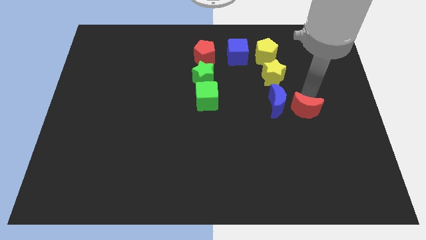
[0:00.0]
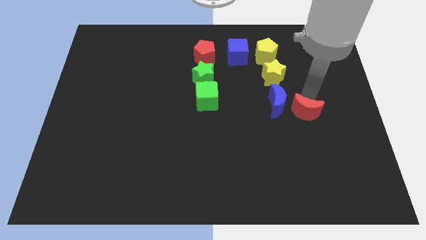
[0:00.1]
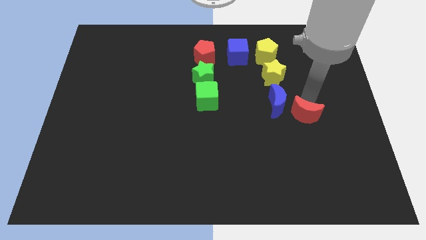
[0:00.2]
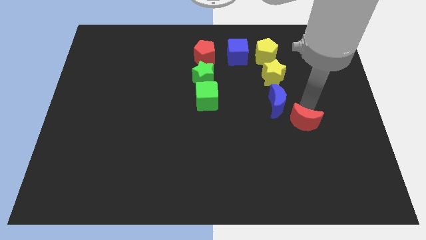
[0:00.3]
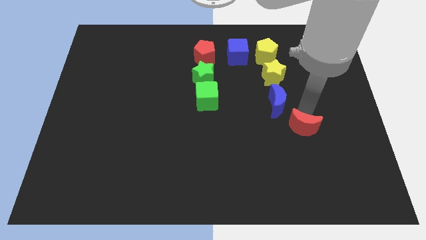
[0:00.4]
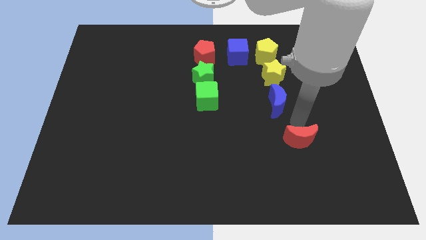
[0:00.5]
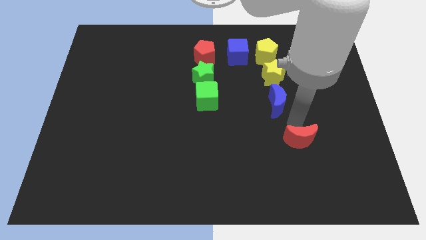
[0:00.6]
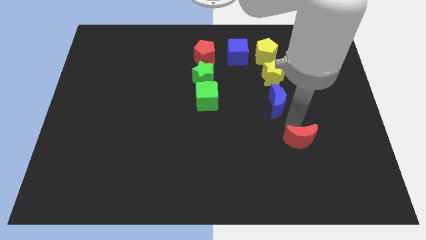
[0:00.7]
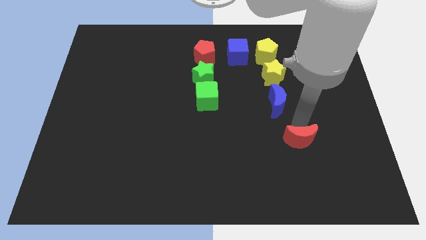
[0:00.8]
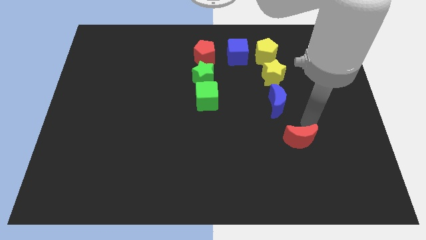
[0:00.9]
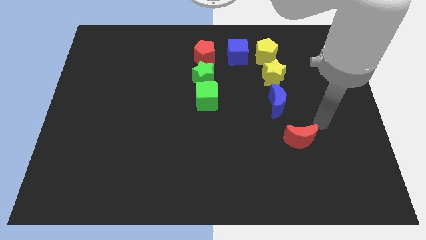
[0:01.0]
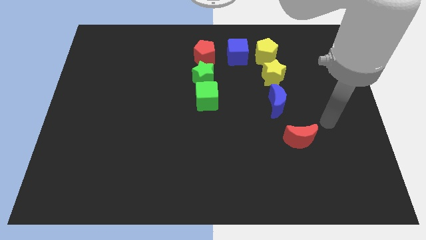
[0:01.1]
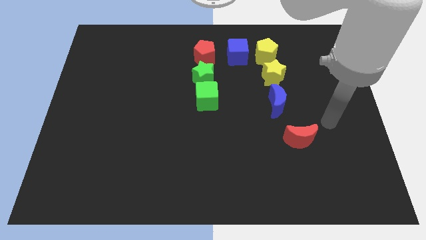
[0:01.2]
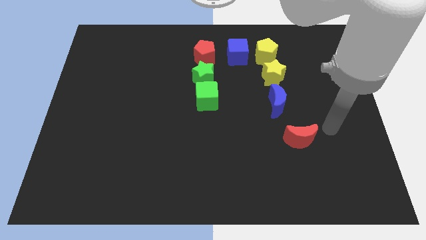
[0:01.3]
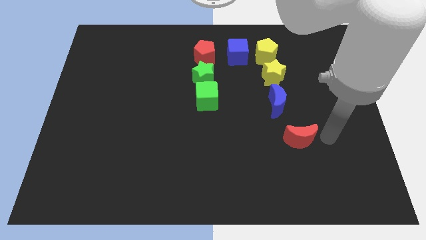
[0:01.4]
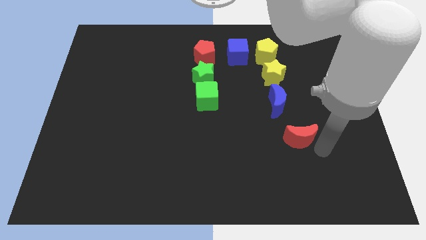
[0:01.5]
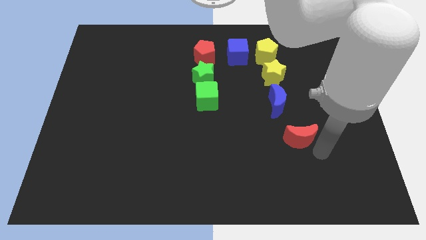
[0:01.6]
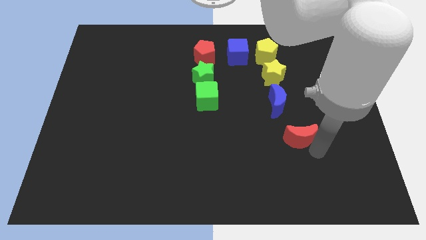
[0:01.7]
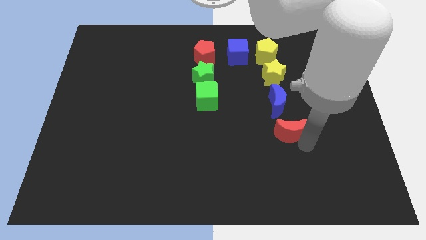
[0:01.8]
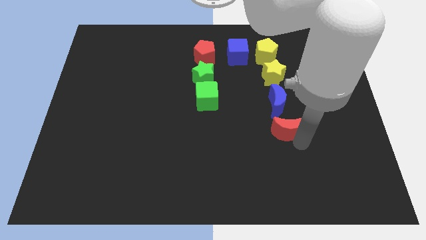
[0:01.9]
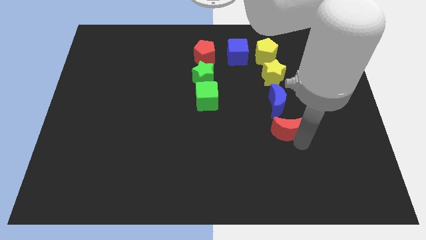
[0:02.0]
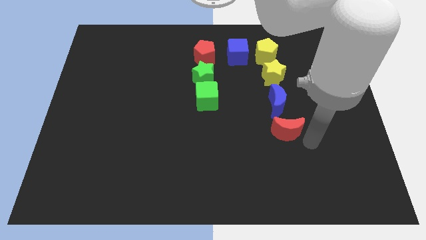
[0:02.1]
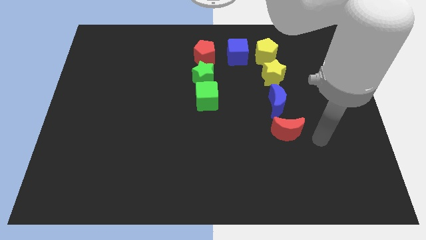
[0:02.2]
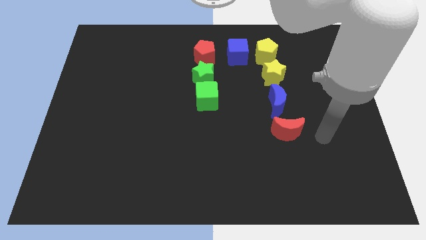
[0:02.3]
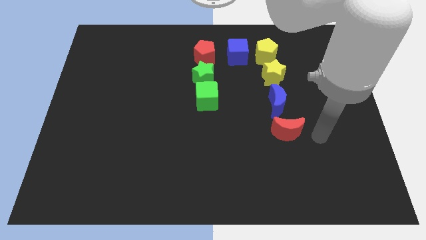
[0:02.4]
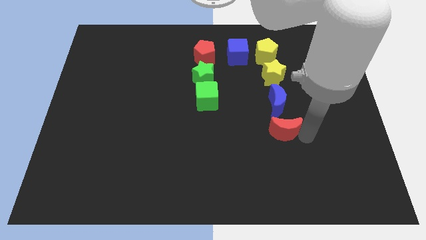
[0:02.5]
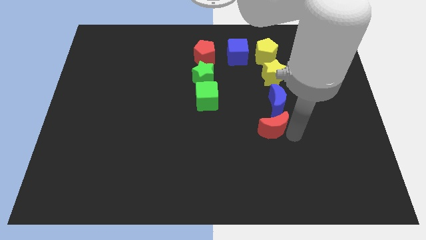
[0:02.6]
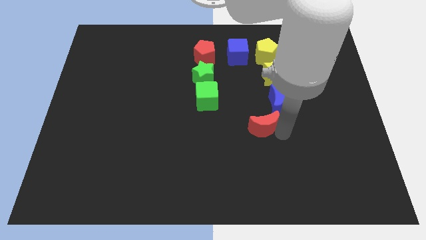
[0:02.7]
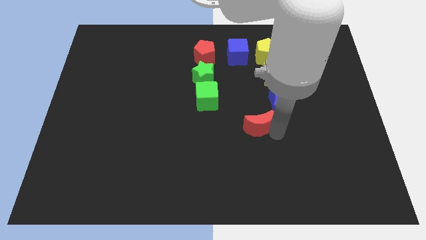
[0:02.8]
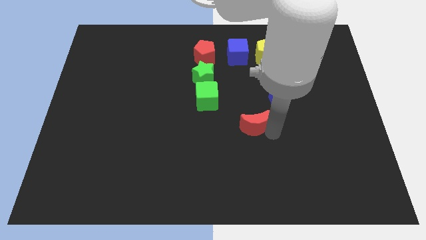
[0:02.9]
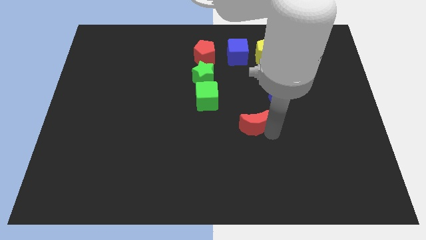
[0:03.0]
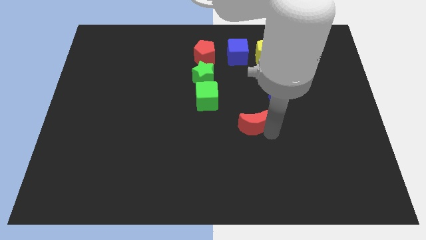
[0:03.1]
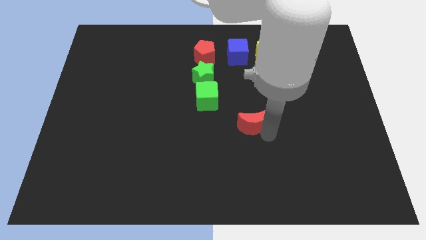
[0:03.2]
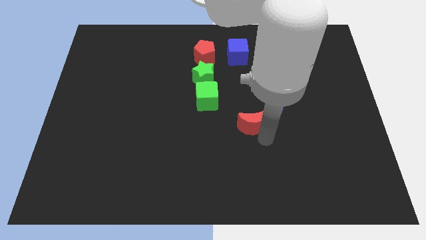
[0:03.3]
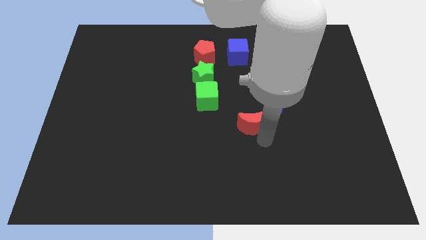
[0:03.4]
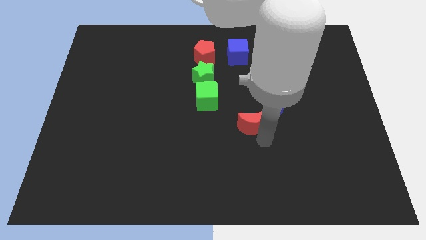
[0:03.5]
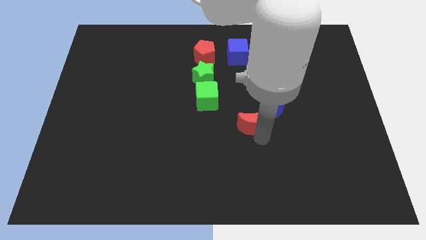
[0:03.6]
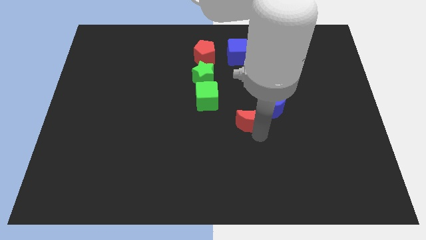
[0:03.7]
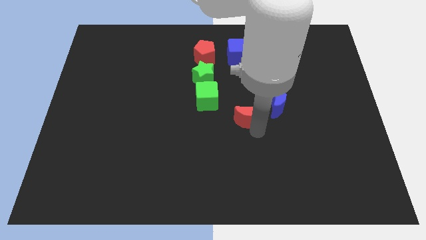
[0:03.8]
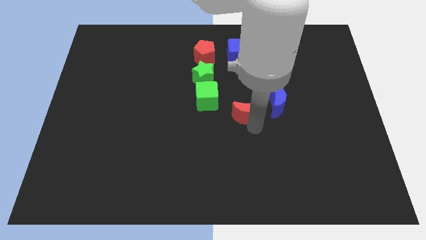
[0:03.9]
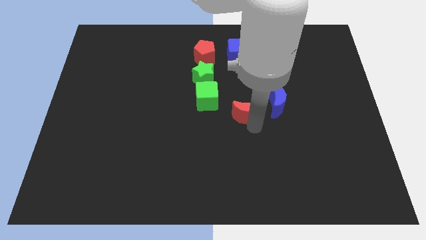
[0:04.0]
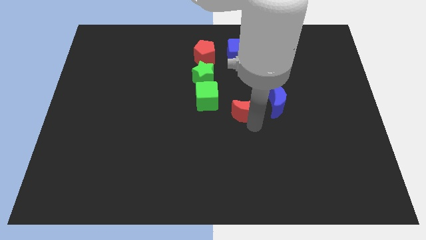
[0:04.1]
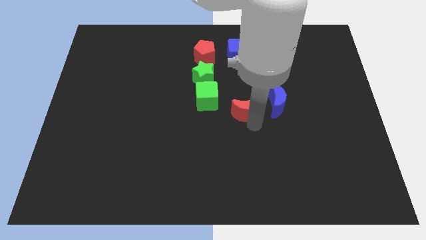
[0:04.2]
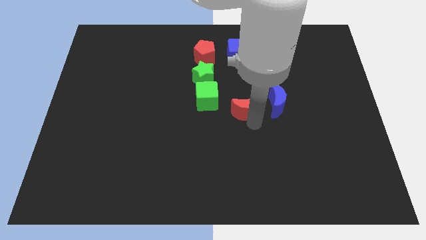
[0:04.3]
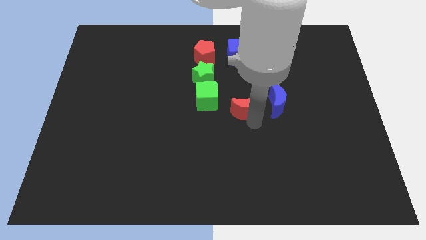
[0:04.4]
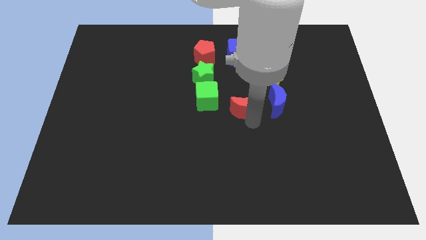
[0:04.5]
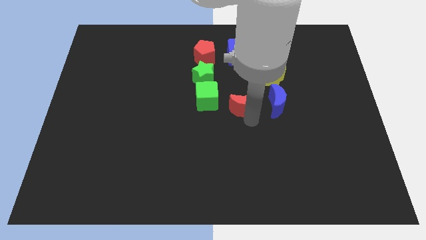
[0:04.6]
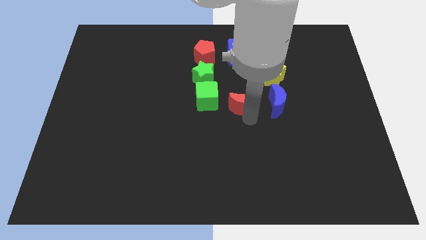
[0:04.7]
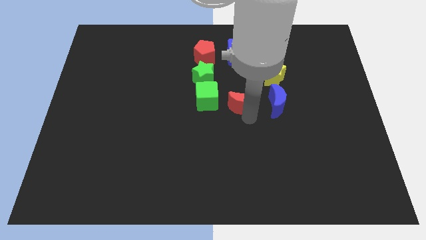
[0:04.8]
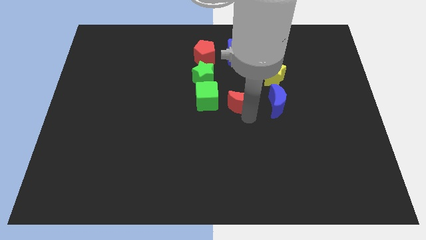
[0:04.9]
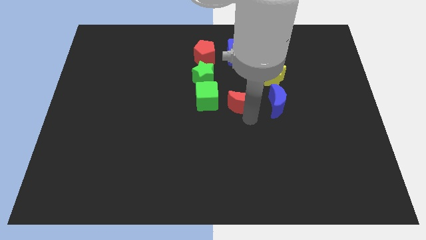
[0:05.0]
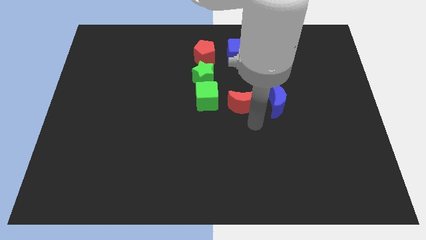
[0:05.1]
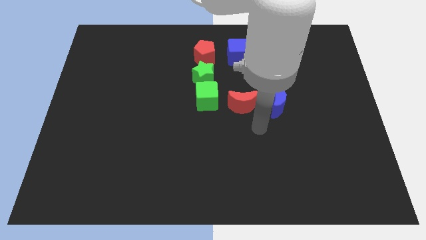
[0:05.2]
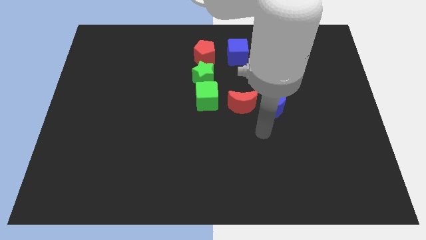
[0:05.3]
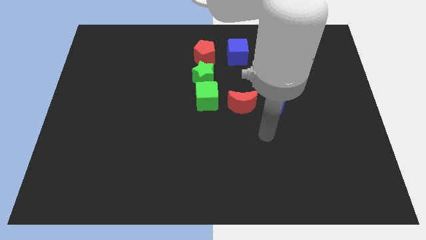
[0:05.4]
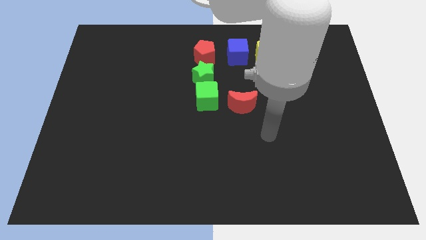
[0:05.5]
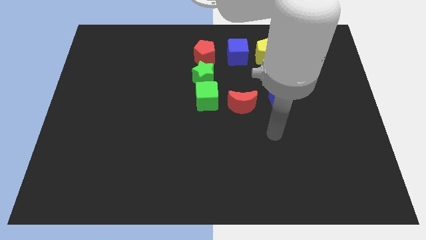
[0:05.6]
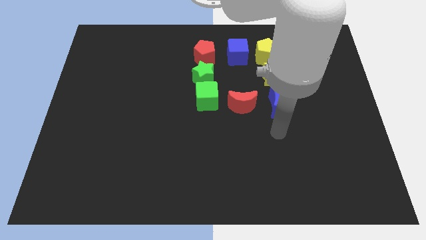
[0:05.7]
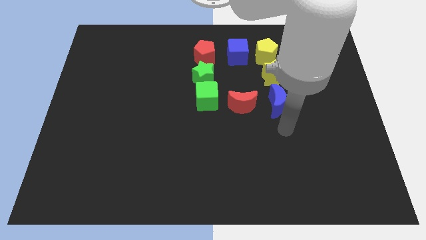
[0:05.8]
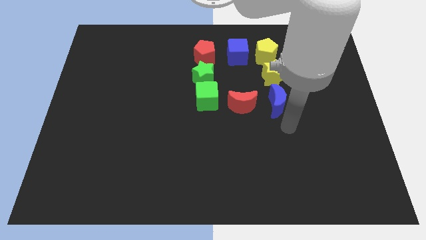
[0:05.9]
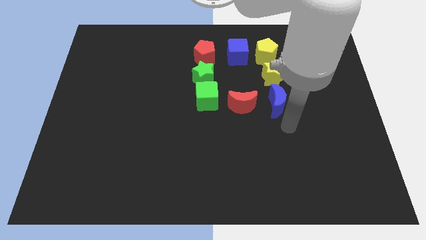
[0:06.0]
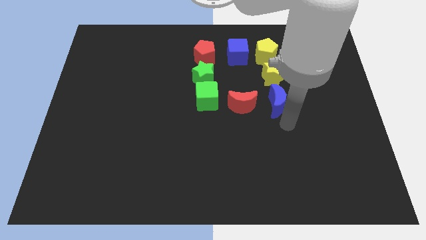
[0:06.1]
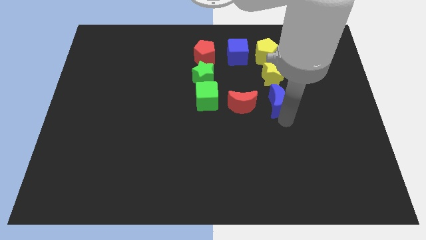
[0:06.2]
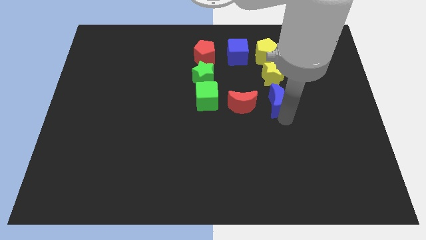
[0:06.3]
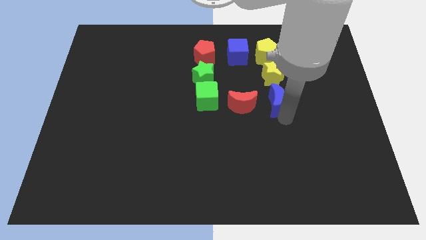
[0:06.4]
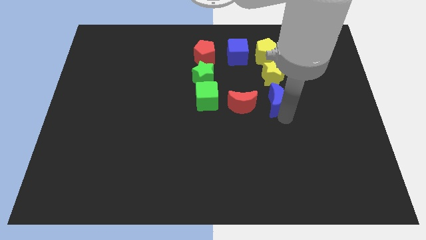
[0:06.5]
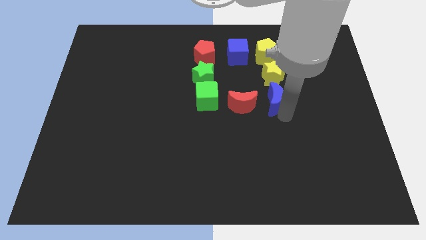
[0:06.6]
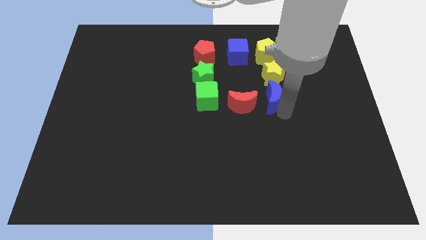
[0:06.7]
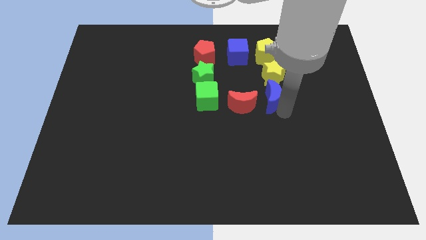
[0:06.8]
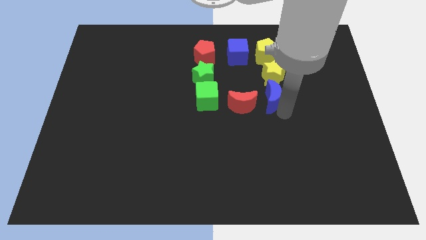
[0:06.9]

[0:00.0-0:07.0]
move the red moon to the left of the blue moon

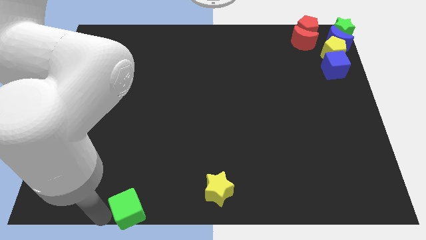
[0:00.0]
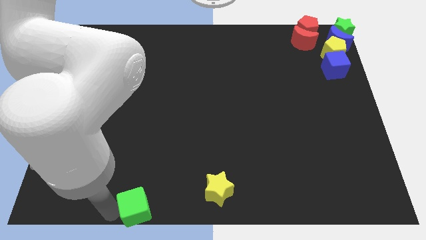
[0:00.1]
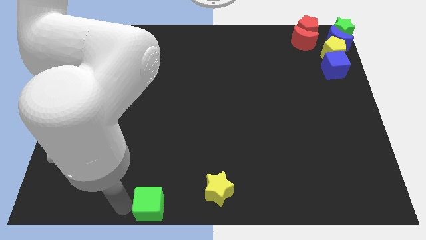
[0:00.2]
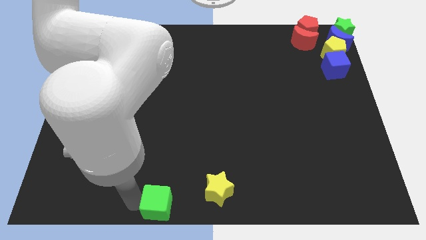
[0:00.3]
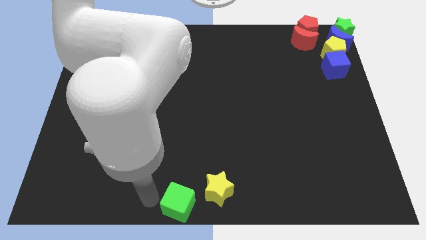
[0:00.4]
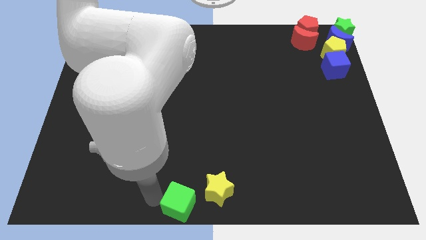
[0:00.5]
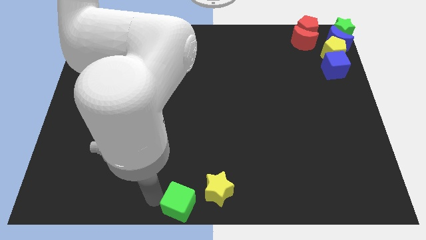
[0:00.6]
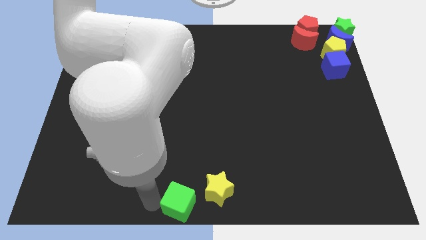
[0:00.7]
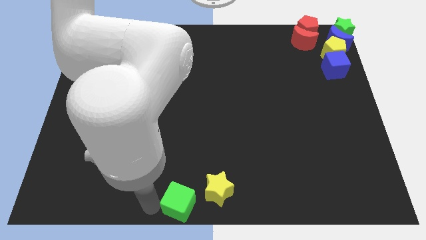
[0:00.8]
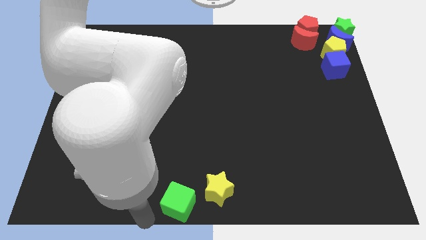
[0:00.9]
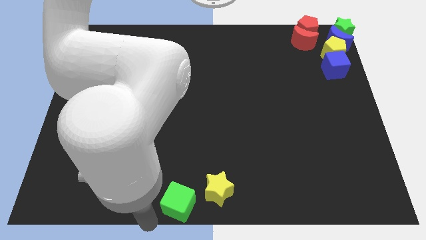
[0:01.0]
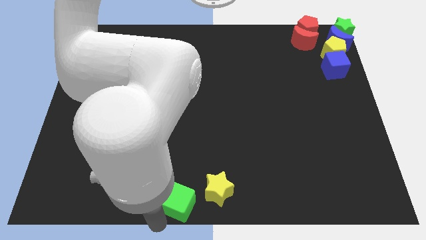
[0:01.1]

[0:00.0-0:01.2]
move the green cube to the left side of the yellow star

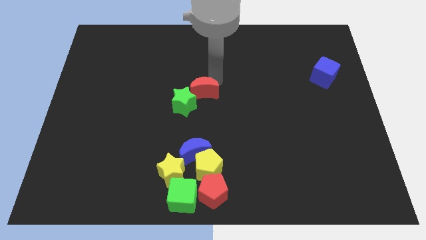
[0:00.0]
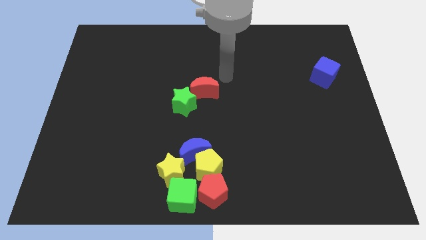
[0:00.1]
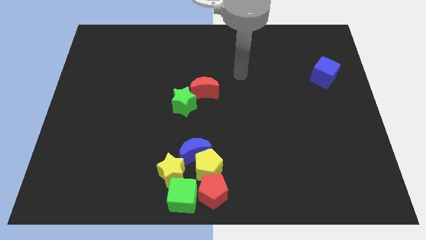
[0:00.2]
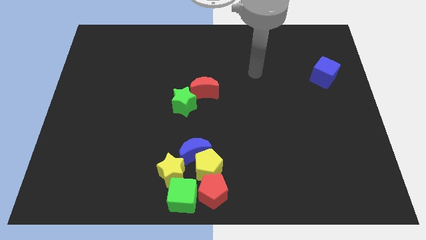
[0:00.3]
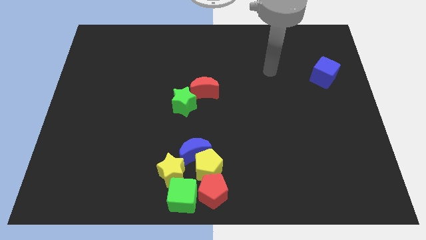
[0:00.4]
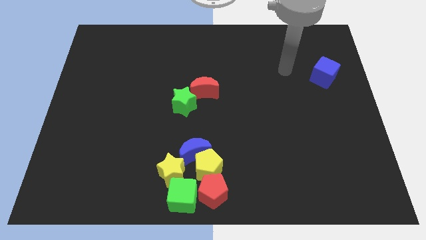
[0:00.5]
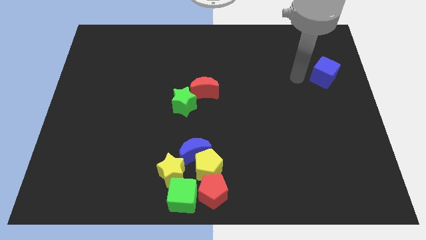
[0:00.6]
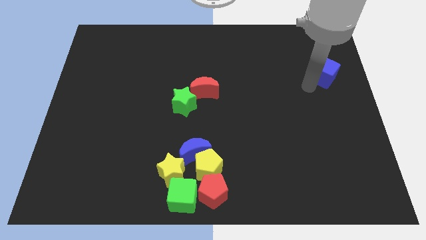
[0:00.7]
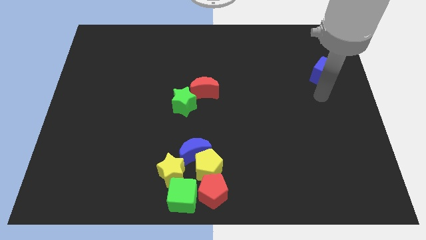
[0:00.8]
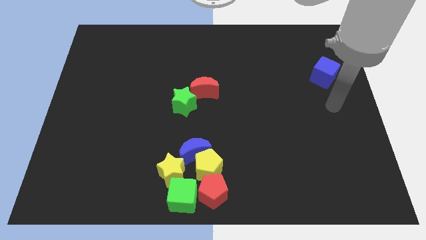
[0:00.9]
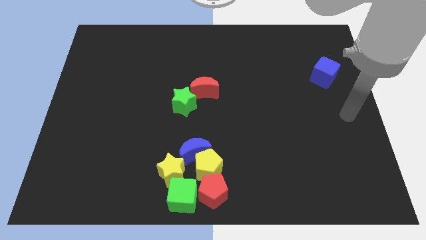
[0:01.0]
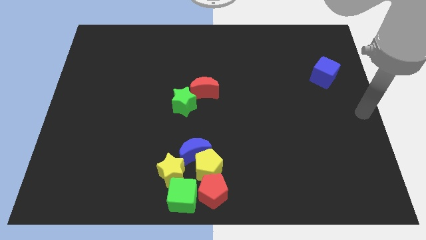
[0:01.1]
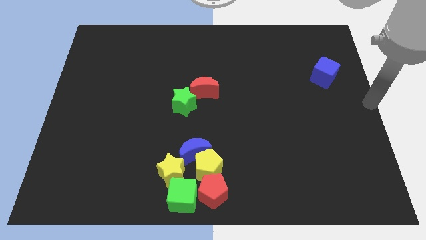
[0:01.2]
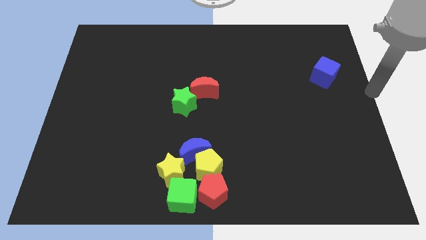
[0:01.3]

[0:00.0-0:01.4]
place your hand at the center right side of the board
